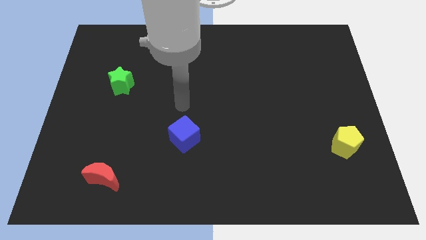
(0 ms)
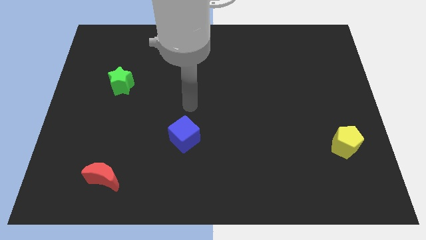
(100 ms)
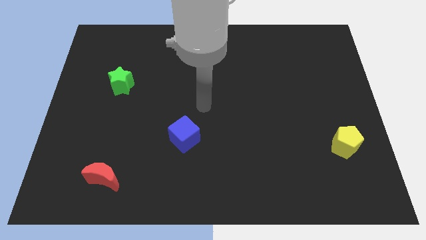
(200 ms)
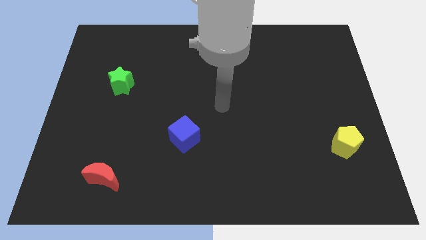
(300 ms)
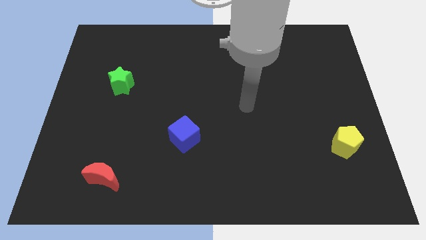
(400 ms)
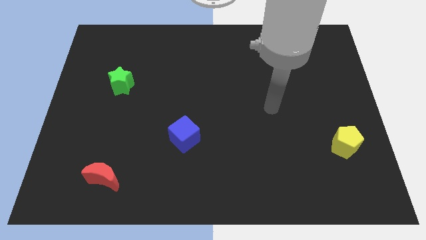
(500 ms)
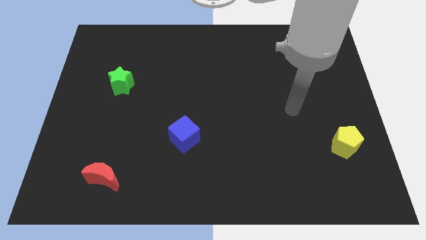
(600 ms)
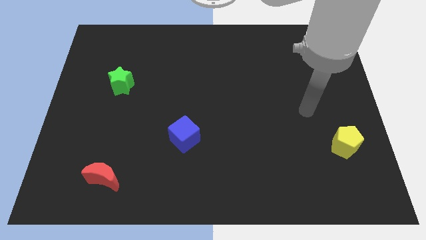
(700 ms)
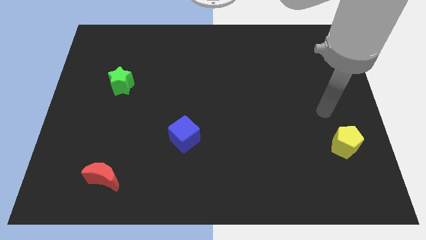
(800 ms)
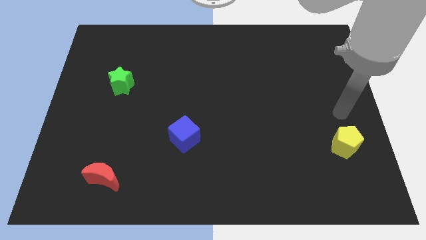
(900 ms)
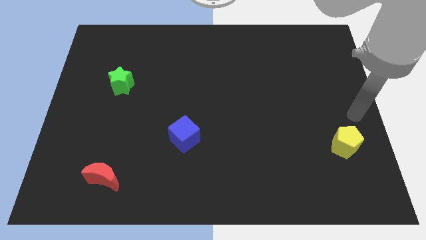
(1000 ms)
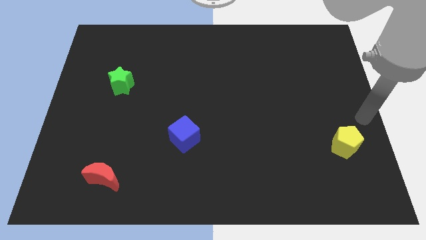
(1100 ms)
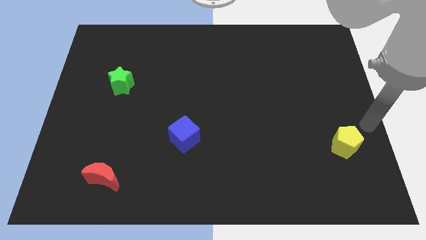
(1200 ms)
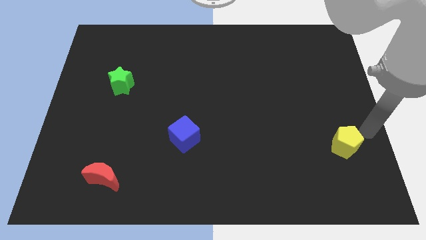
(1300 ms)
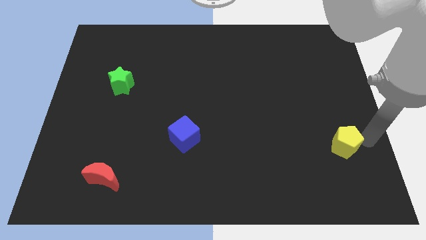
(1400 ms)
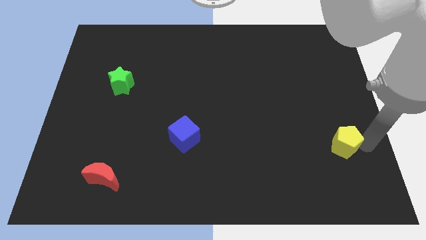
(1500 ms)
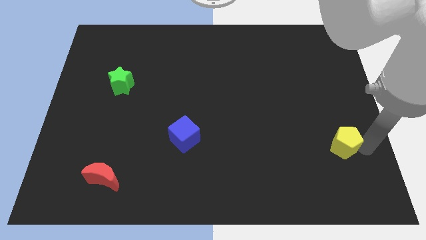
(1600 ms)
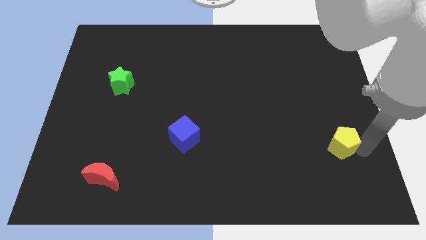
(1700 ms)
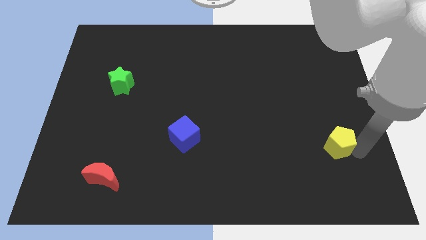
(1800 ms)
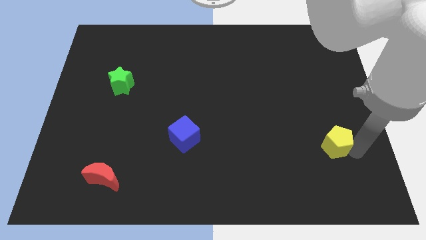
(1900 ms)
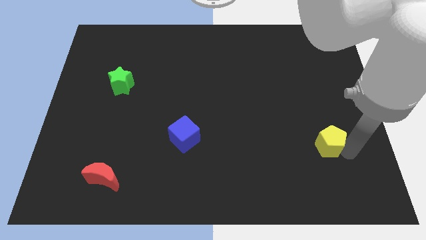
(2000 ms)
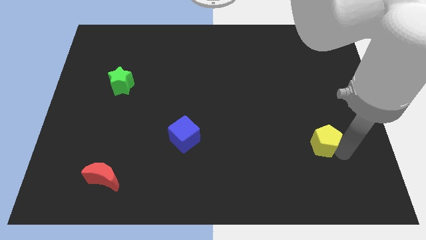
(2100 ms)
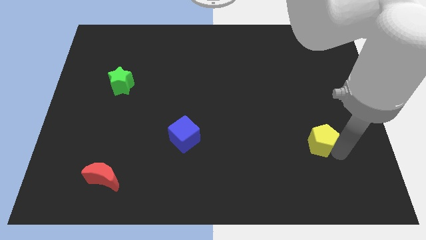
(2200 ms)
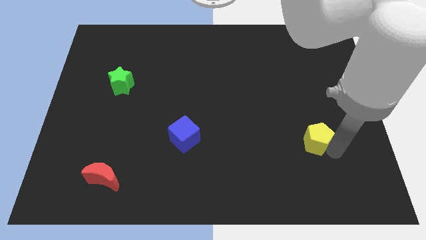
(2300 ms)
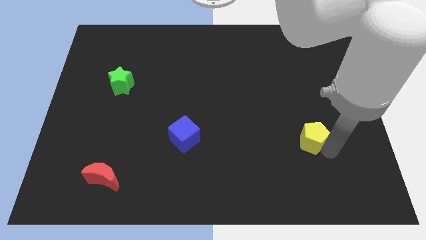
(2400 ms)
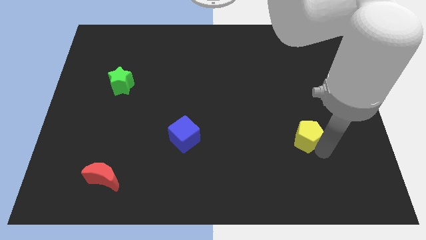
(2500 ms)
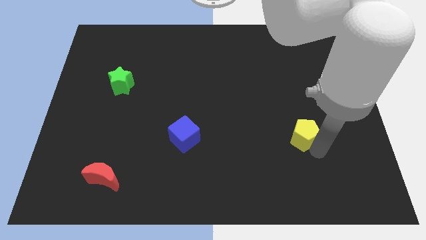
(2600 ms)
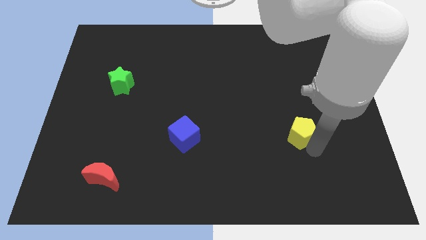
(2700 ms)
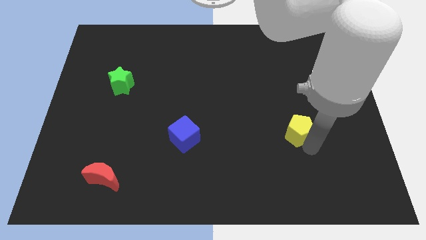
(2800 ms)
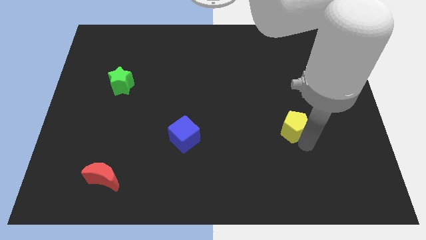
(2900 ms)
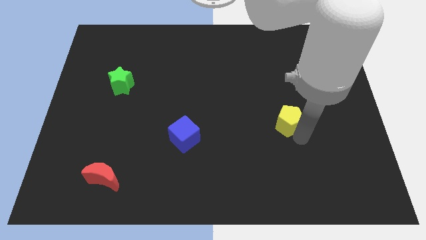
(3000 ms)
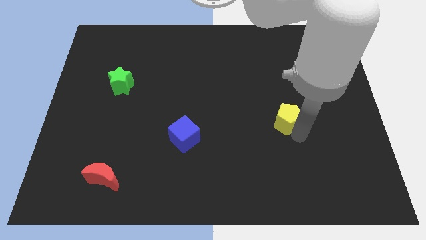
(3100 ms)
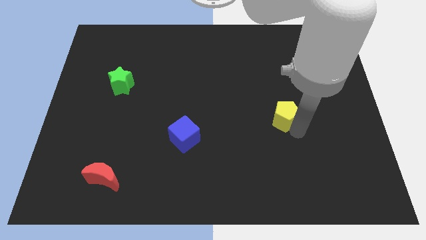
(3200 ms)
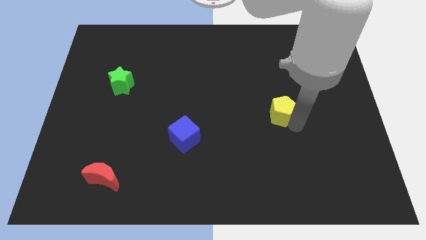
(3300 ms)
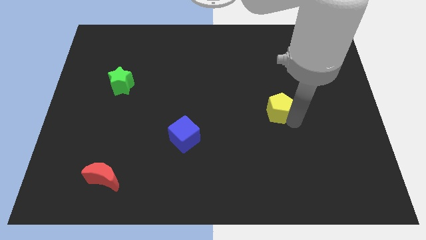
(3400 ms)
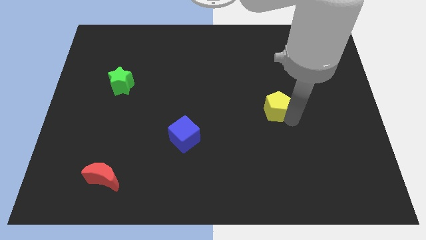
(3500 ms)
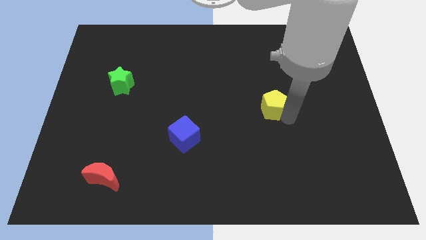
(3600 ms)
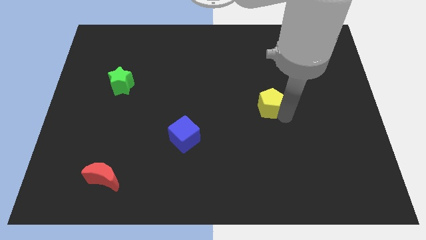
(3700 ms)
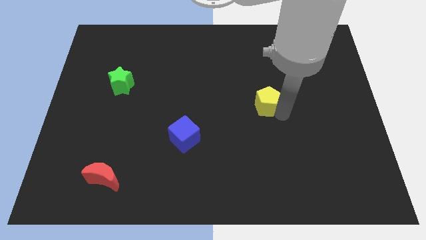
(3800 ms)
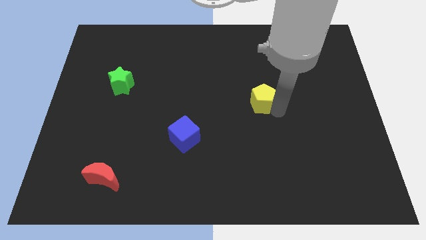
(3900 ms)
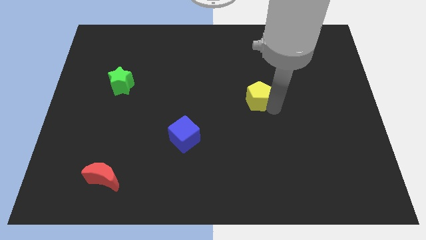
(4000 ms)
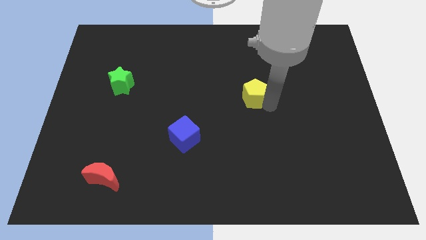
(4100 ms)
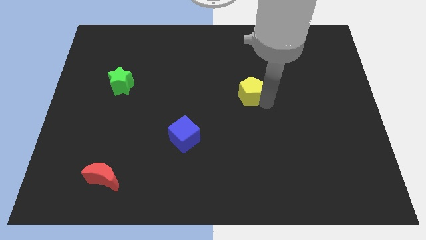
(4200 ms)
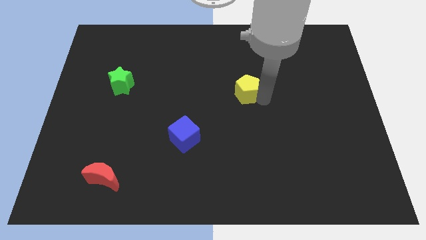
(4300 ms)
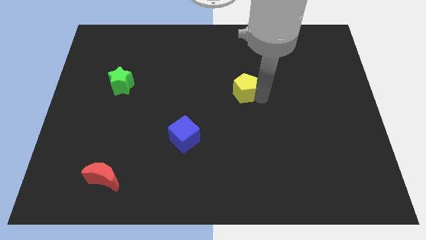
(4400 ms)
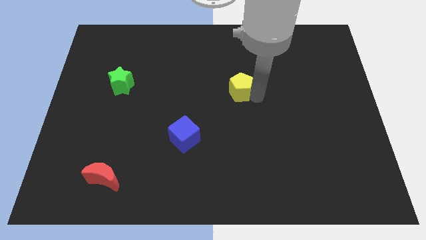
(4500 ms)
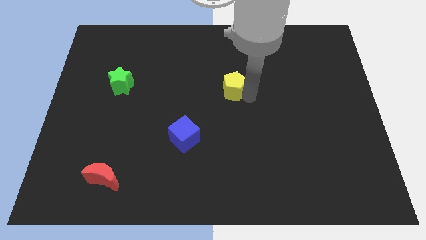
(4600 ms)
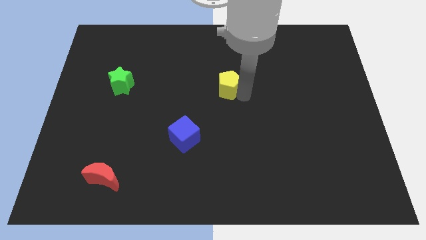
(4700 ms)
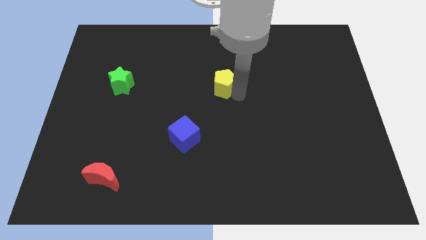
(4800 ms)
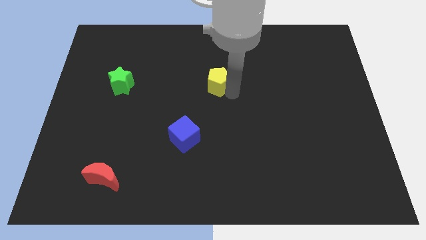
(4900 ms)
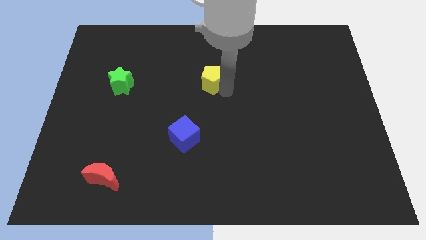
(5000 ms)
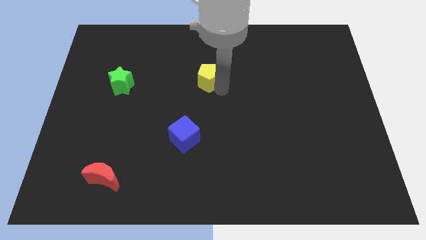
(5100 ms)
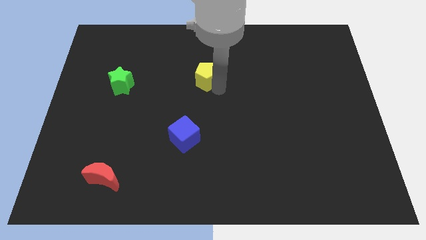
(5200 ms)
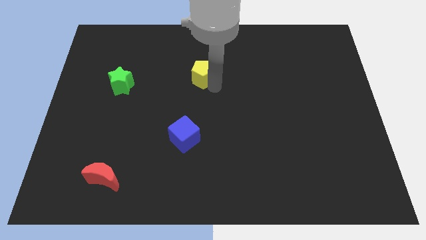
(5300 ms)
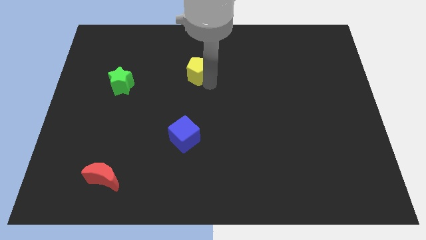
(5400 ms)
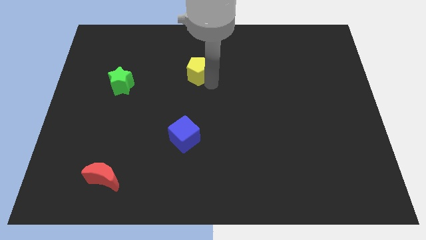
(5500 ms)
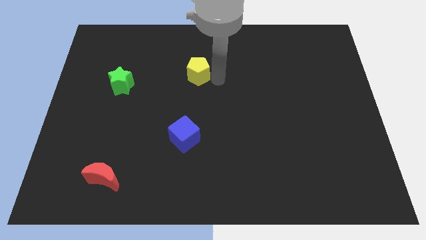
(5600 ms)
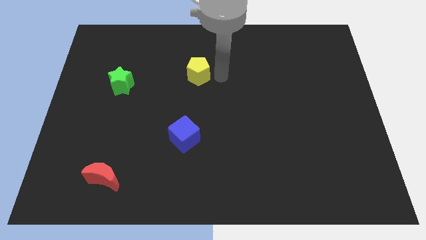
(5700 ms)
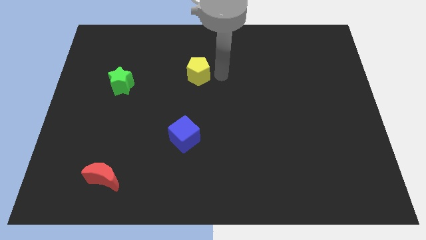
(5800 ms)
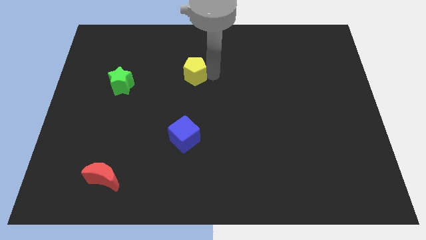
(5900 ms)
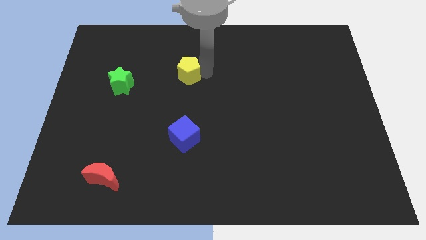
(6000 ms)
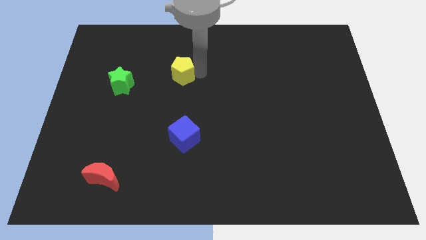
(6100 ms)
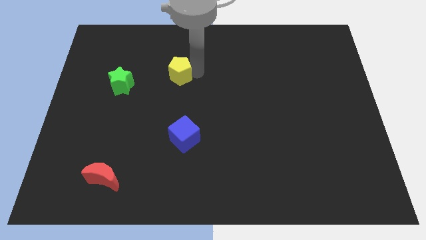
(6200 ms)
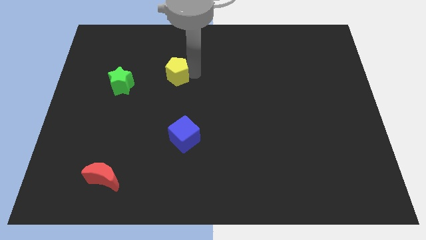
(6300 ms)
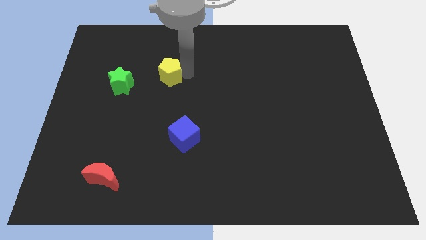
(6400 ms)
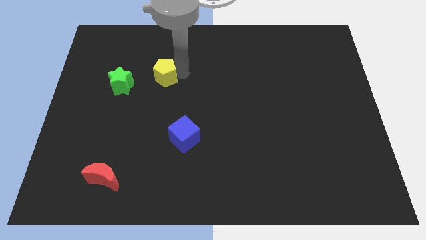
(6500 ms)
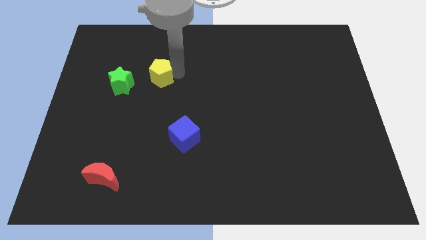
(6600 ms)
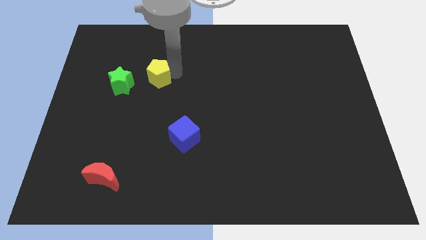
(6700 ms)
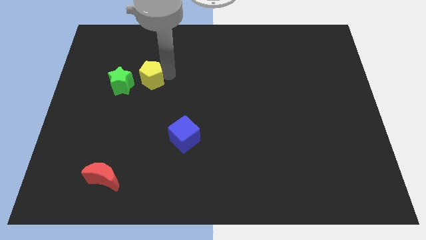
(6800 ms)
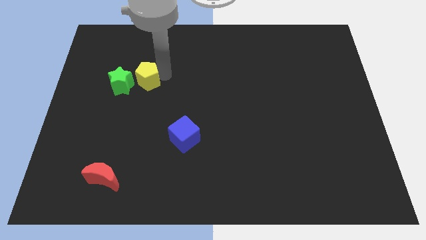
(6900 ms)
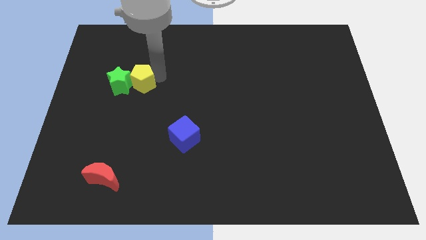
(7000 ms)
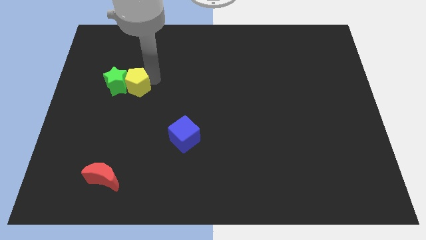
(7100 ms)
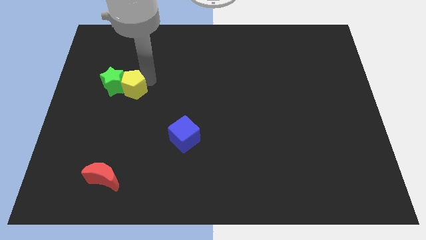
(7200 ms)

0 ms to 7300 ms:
put the yellow pentagon to the star

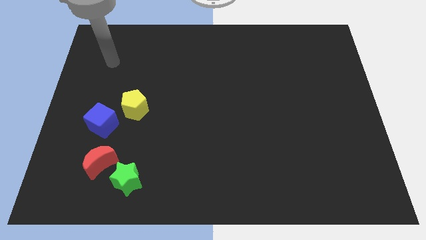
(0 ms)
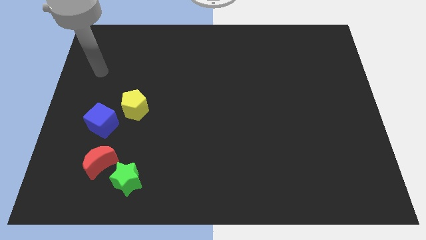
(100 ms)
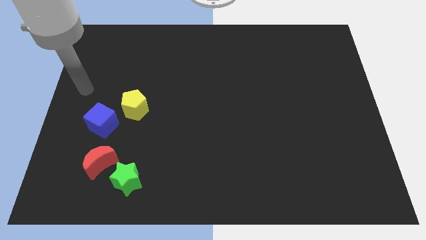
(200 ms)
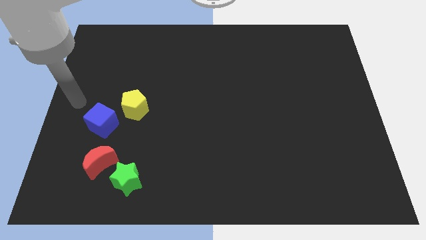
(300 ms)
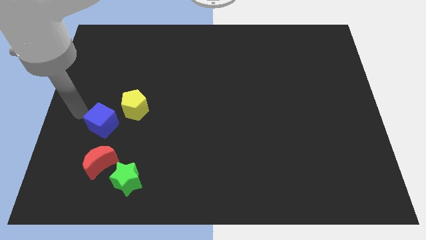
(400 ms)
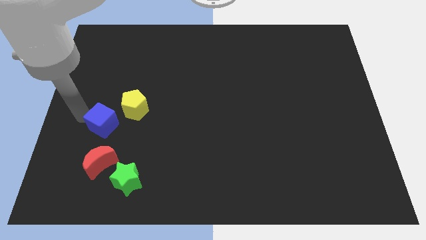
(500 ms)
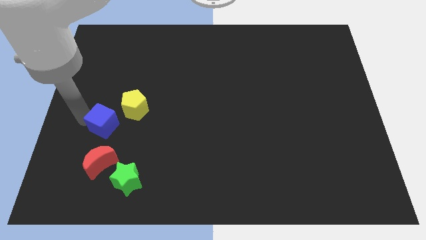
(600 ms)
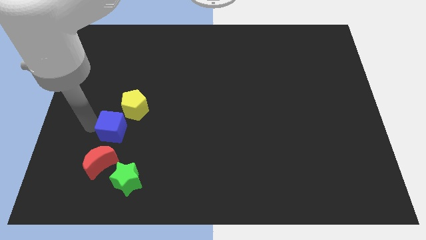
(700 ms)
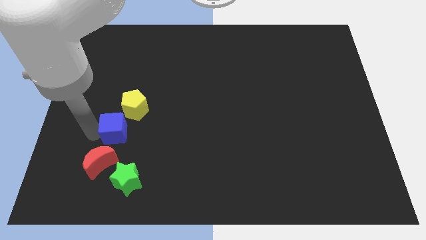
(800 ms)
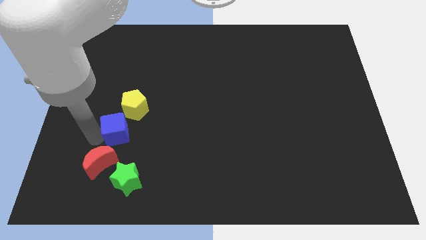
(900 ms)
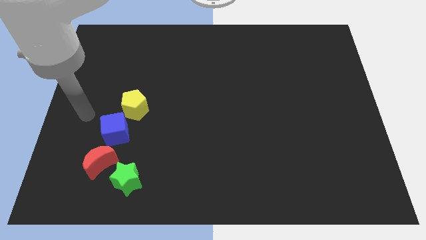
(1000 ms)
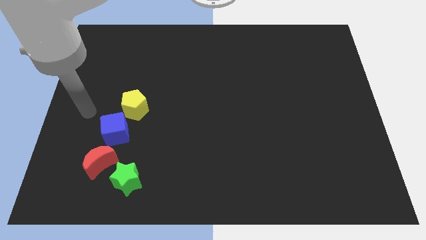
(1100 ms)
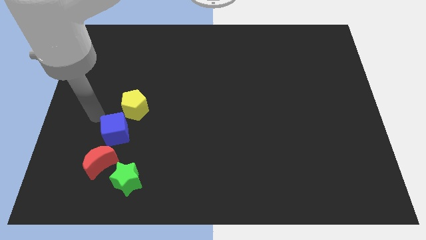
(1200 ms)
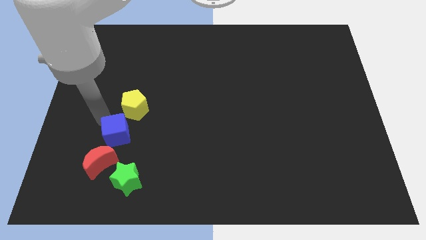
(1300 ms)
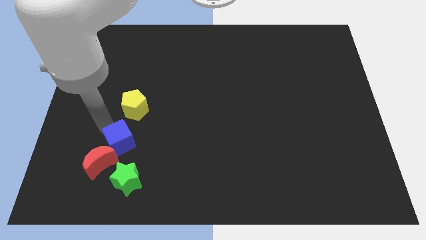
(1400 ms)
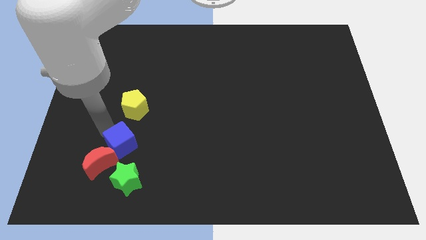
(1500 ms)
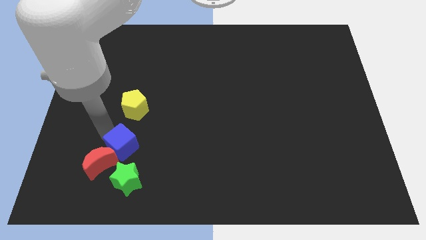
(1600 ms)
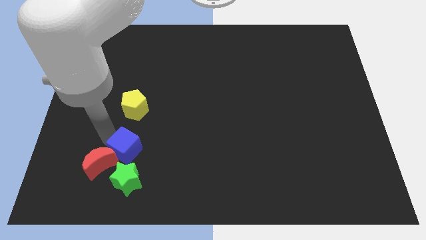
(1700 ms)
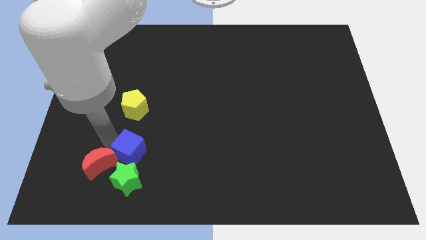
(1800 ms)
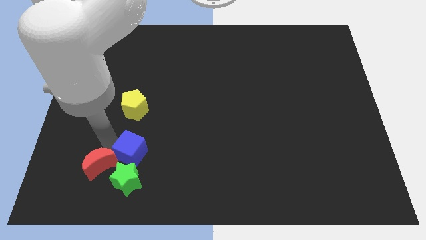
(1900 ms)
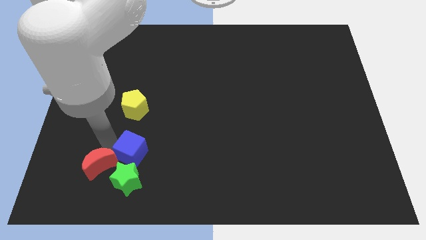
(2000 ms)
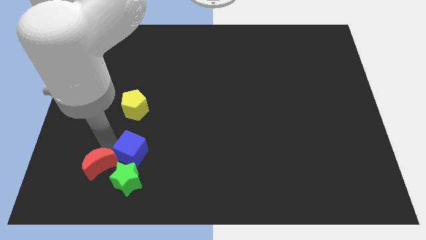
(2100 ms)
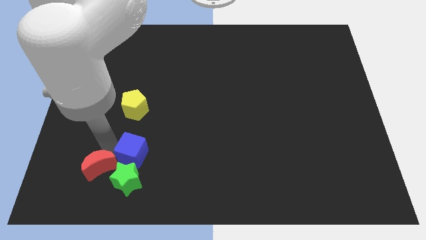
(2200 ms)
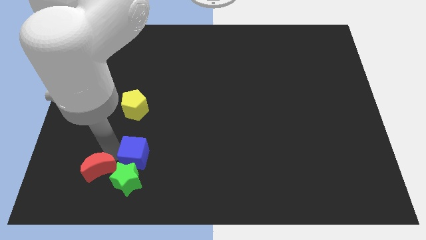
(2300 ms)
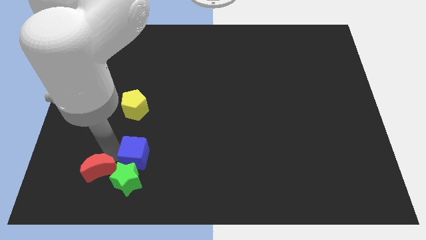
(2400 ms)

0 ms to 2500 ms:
slide the blue block towards the star
